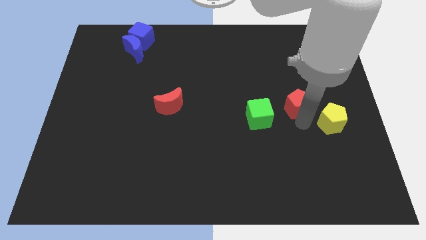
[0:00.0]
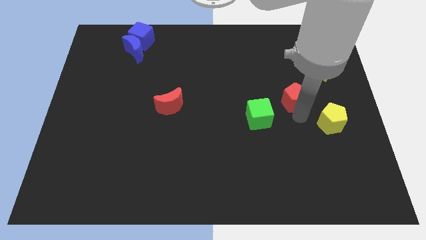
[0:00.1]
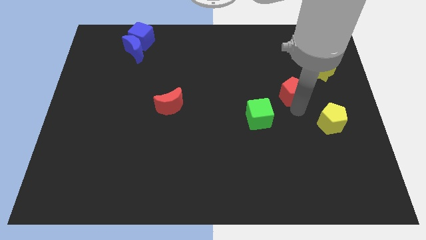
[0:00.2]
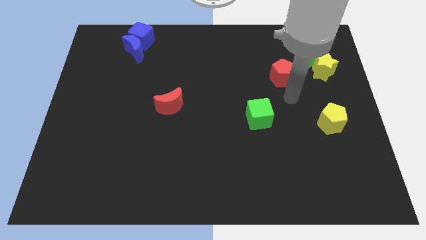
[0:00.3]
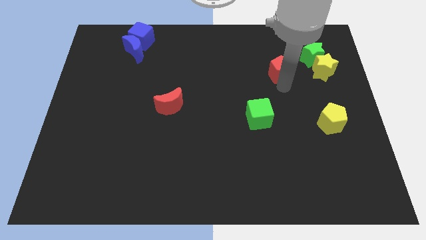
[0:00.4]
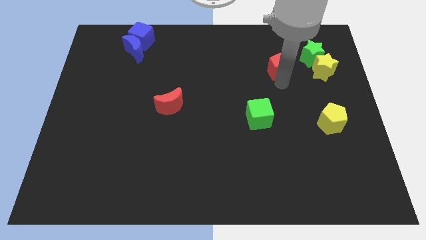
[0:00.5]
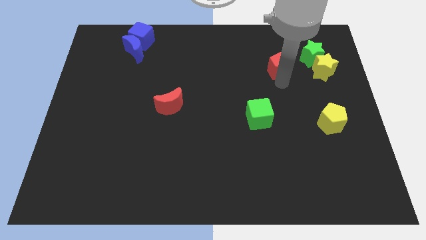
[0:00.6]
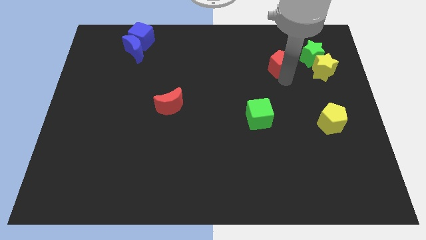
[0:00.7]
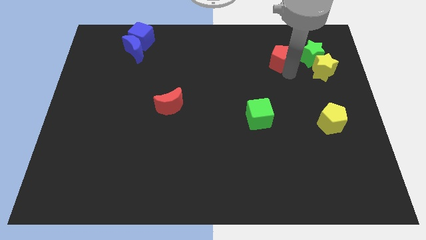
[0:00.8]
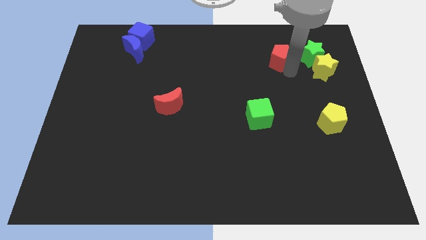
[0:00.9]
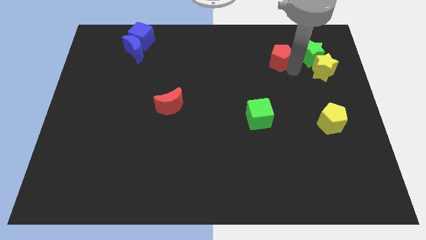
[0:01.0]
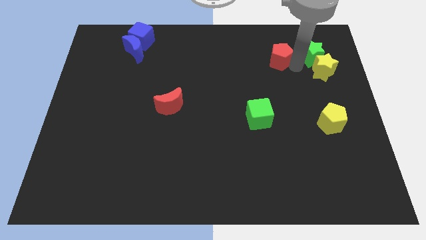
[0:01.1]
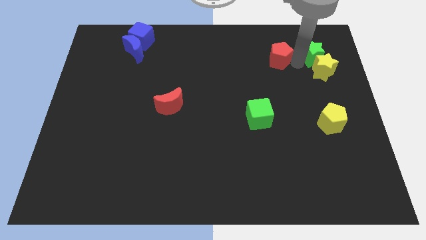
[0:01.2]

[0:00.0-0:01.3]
move the red pentagon towards the green star yellow star

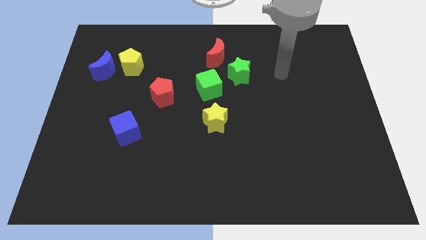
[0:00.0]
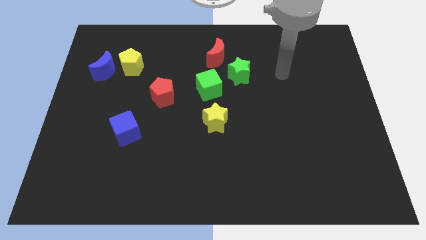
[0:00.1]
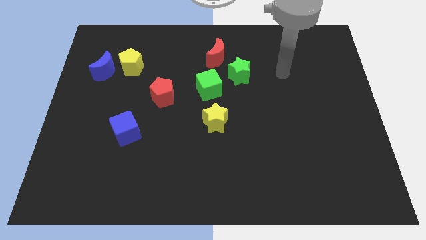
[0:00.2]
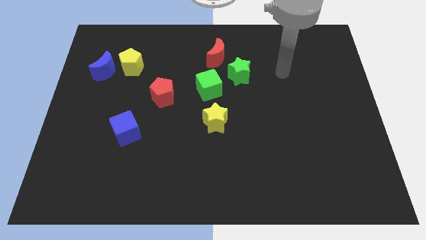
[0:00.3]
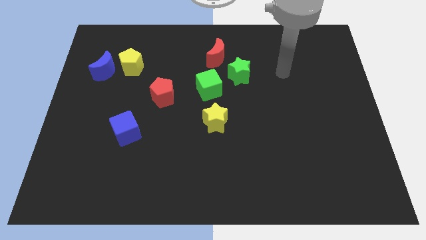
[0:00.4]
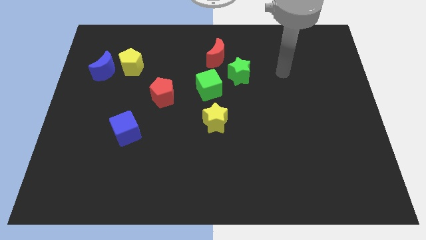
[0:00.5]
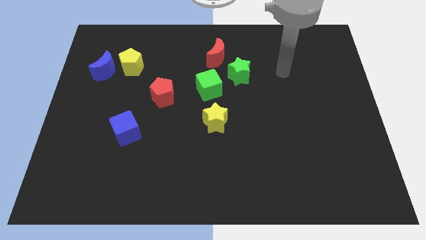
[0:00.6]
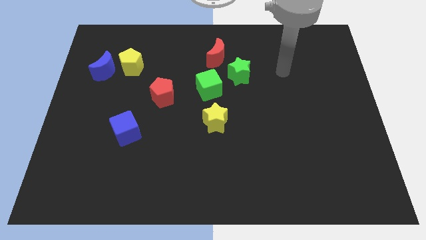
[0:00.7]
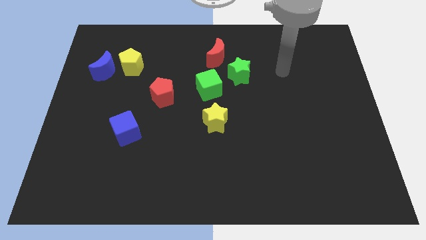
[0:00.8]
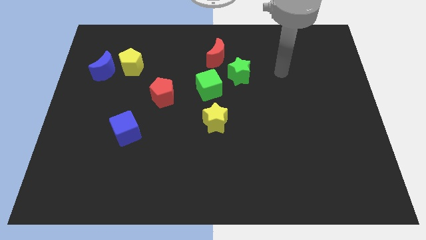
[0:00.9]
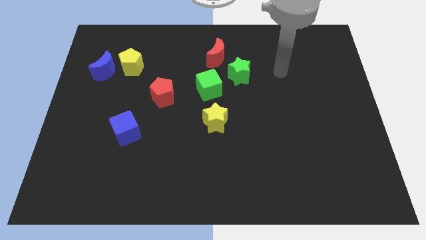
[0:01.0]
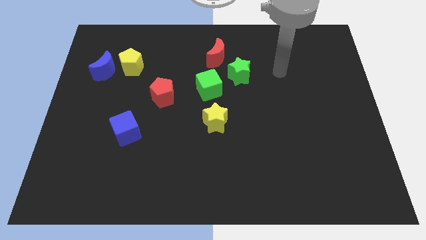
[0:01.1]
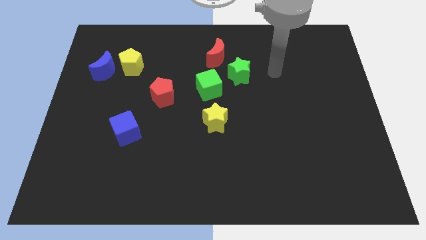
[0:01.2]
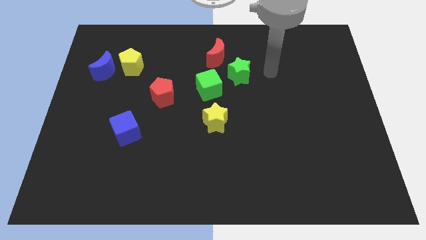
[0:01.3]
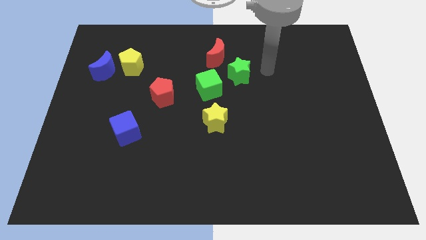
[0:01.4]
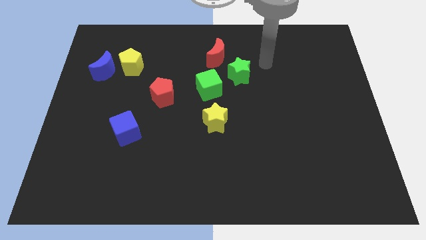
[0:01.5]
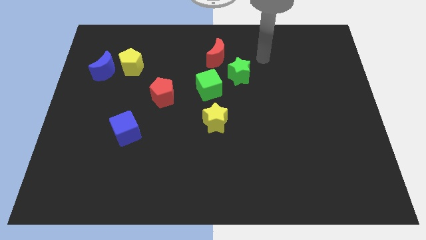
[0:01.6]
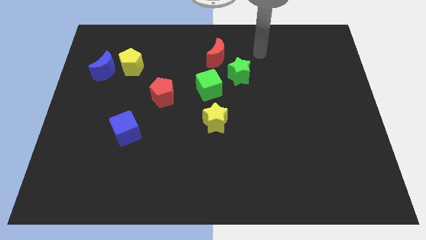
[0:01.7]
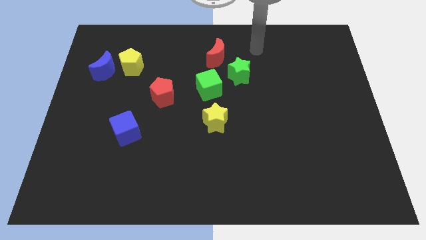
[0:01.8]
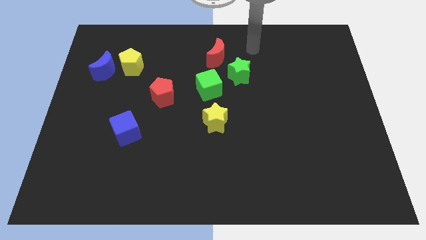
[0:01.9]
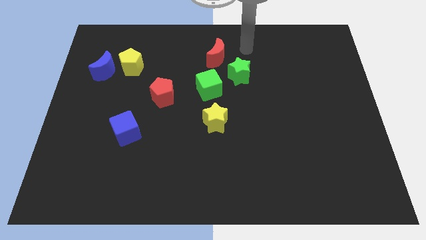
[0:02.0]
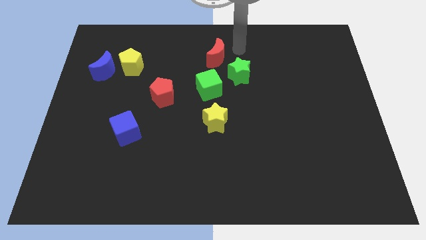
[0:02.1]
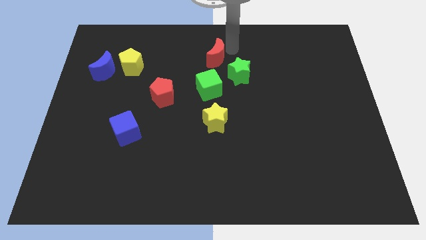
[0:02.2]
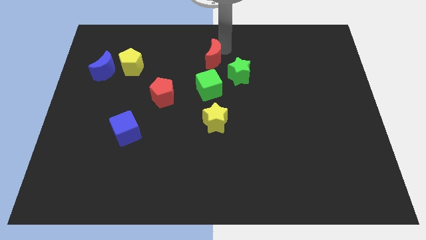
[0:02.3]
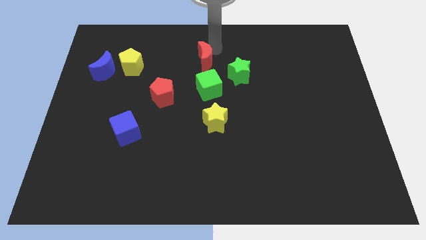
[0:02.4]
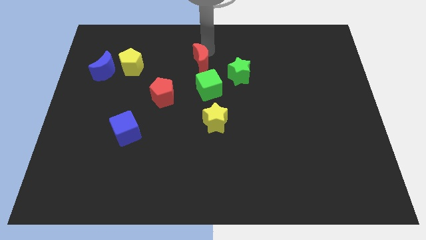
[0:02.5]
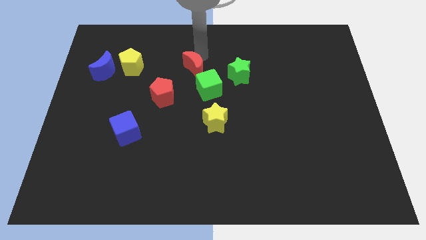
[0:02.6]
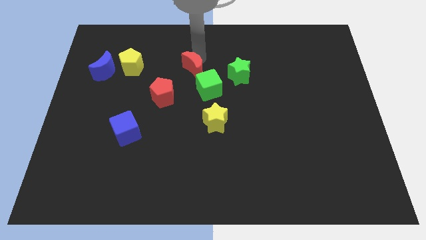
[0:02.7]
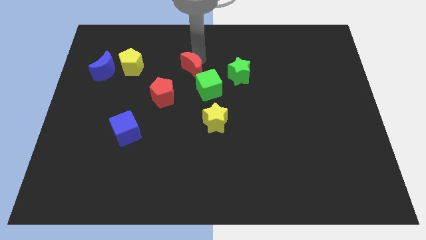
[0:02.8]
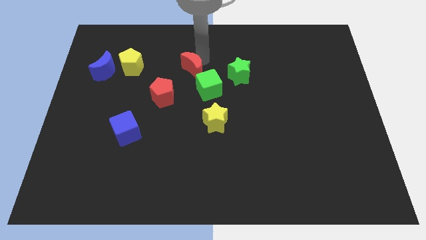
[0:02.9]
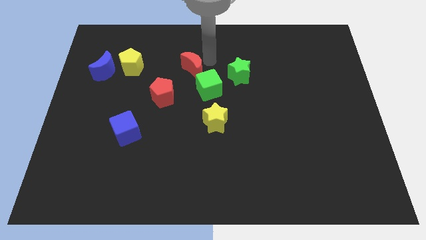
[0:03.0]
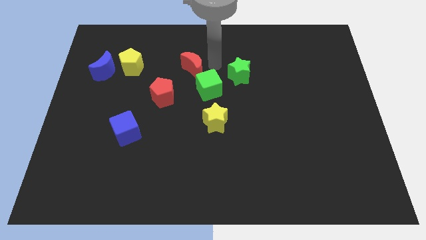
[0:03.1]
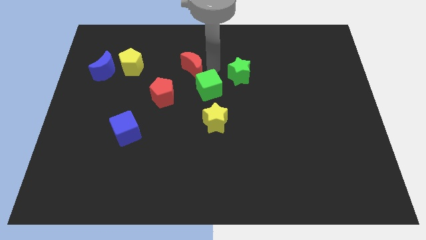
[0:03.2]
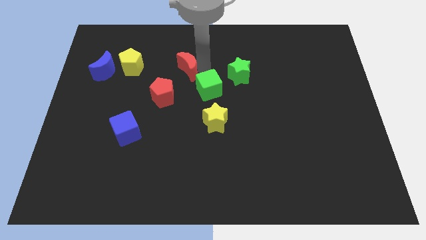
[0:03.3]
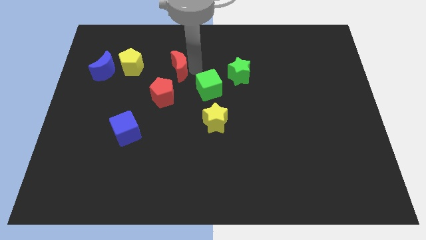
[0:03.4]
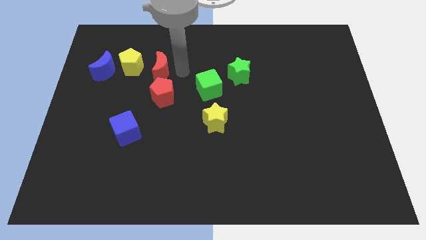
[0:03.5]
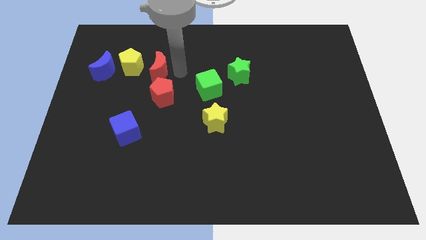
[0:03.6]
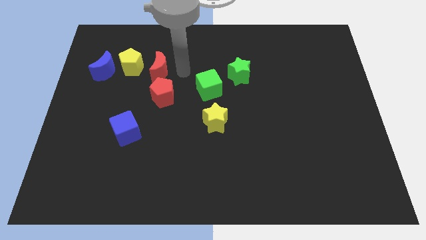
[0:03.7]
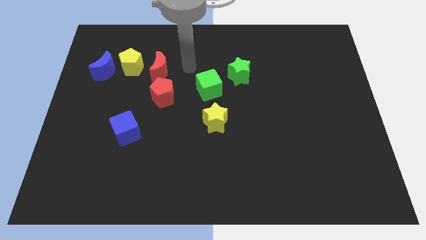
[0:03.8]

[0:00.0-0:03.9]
push the red crescent to the right of the yellow pentagon

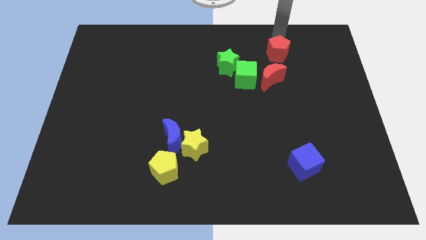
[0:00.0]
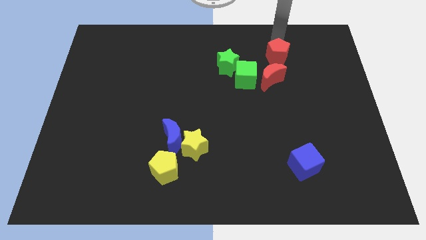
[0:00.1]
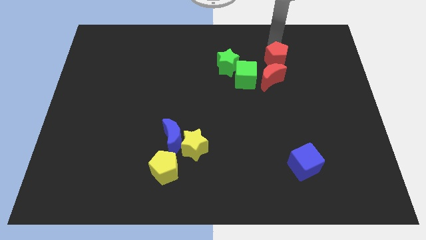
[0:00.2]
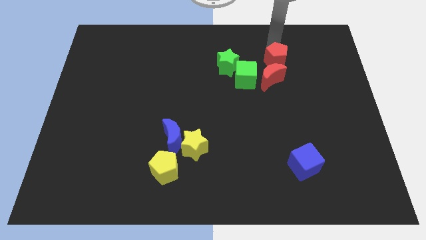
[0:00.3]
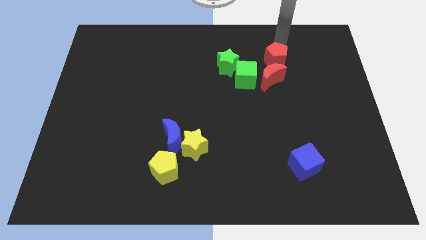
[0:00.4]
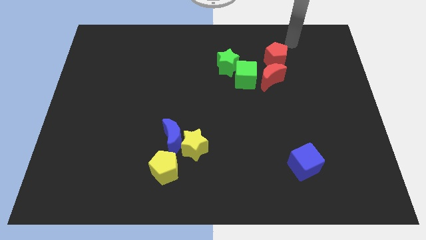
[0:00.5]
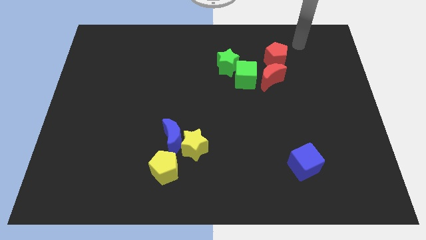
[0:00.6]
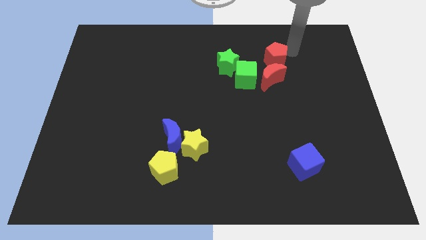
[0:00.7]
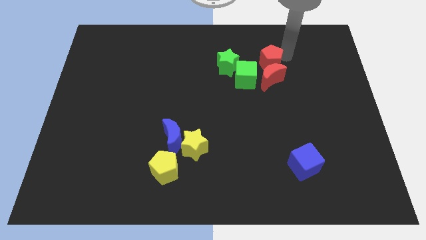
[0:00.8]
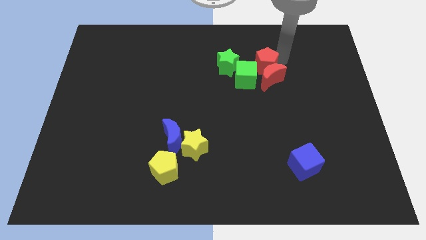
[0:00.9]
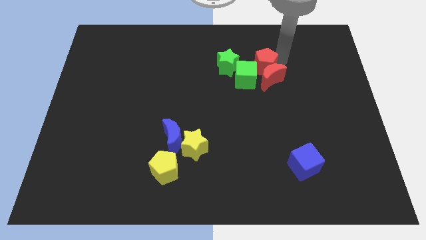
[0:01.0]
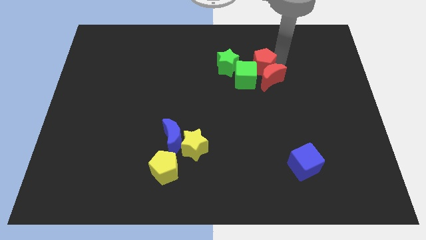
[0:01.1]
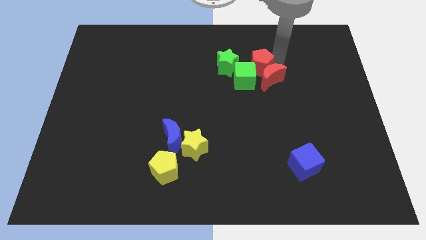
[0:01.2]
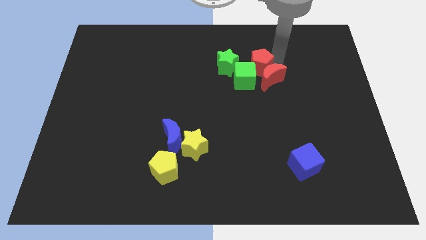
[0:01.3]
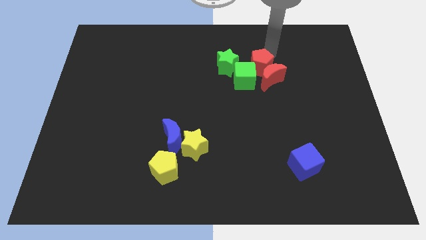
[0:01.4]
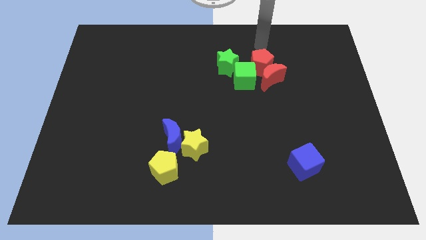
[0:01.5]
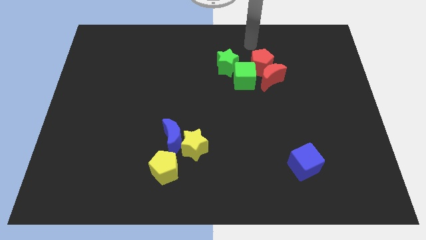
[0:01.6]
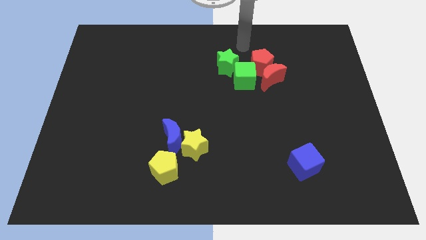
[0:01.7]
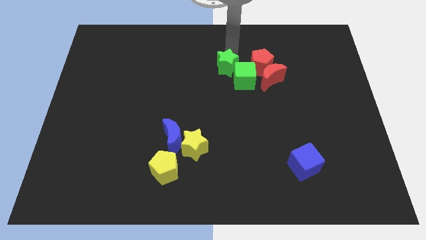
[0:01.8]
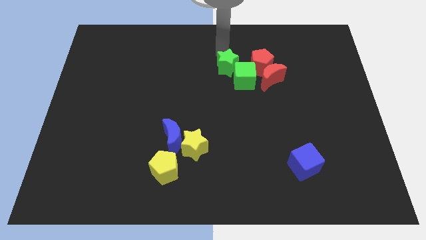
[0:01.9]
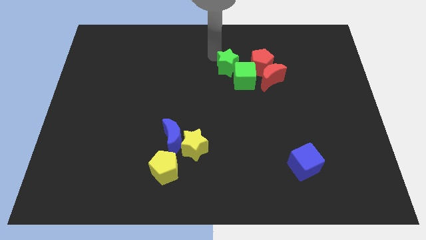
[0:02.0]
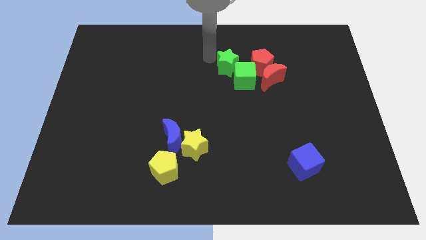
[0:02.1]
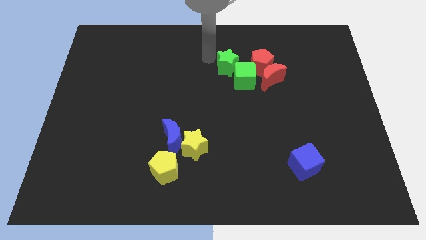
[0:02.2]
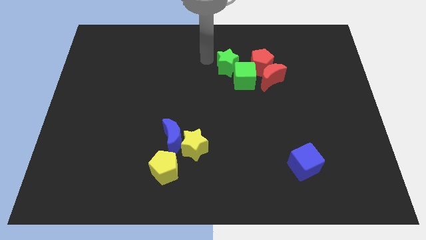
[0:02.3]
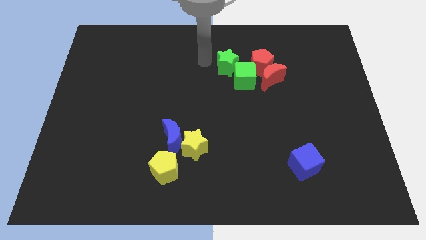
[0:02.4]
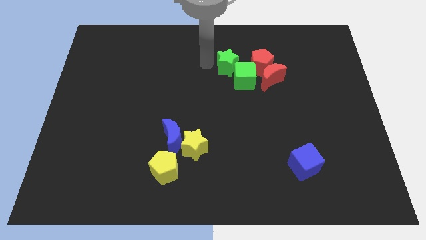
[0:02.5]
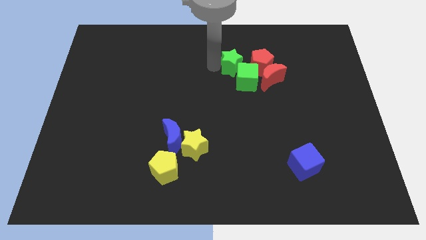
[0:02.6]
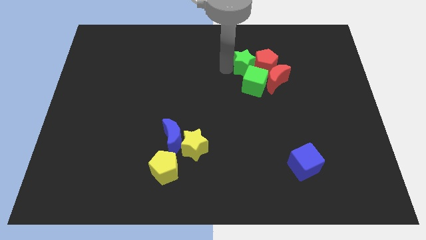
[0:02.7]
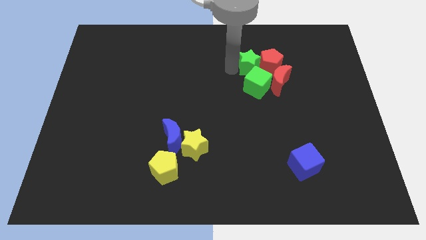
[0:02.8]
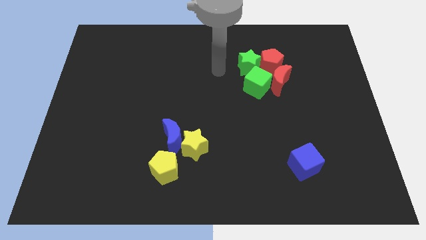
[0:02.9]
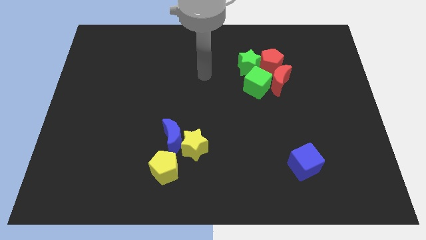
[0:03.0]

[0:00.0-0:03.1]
bring red blocks and green blocks close to each other

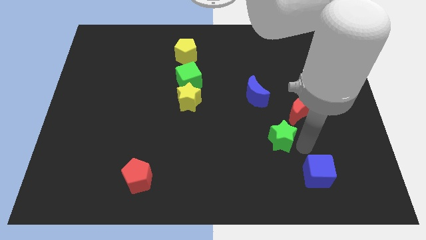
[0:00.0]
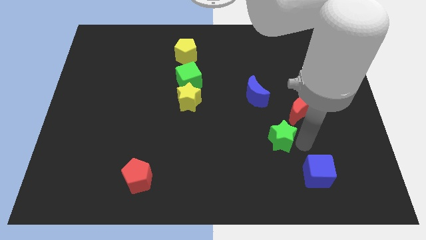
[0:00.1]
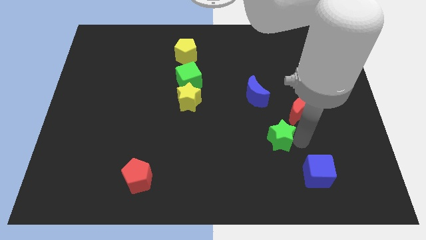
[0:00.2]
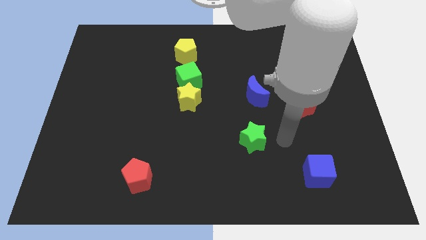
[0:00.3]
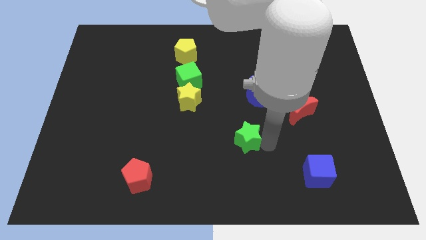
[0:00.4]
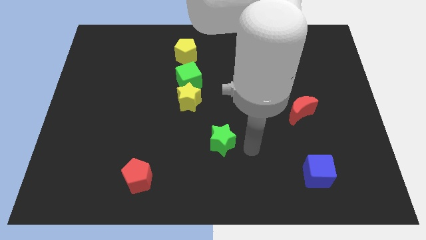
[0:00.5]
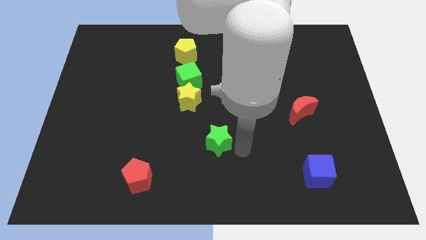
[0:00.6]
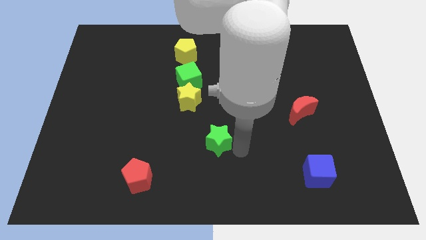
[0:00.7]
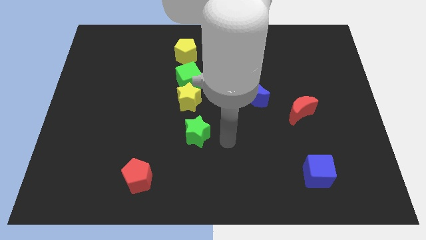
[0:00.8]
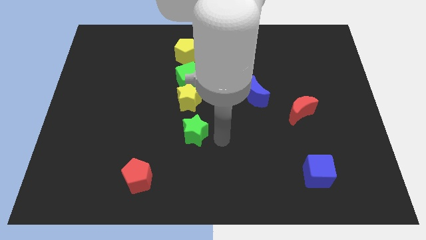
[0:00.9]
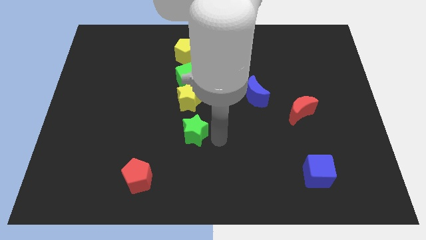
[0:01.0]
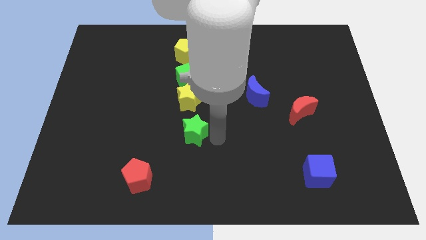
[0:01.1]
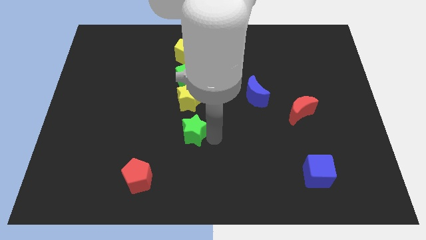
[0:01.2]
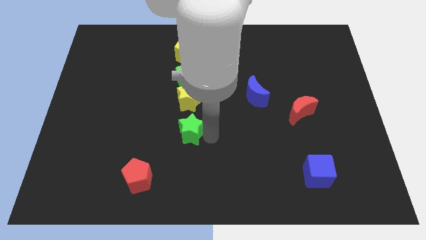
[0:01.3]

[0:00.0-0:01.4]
move the green star to the bottom of the yellow star
